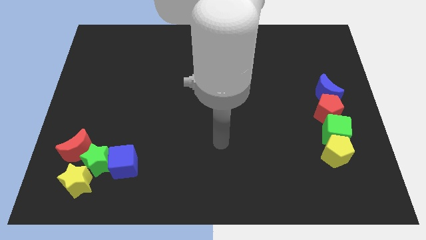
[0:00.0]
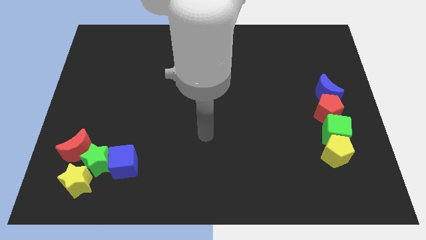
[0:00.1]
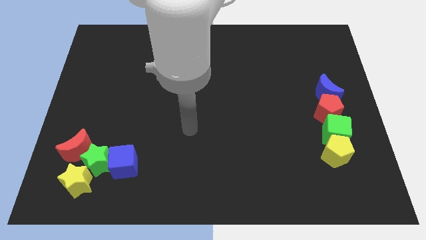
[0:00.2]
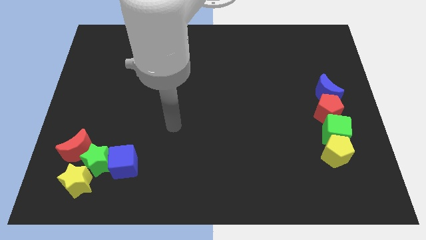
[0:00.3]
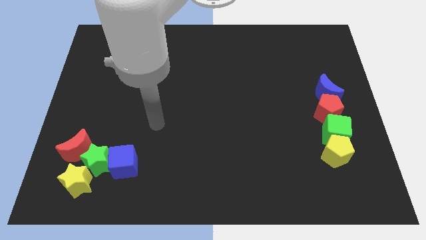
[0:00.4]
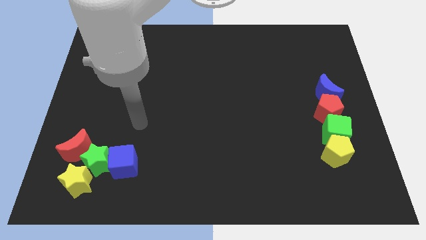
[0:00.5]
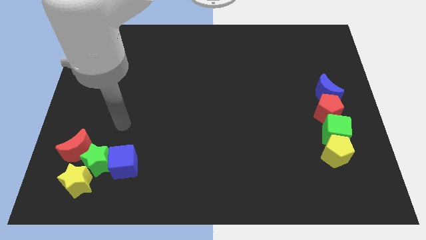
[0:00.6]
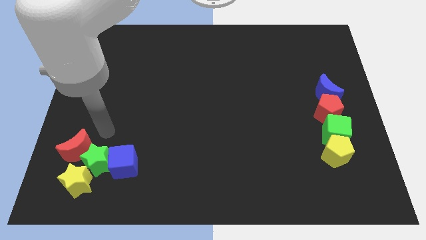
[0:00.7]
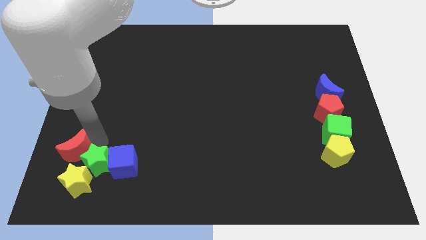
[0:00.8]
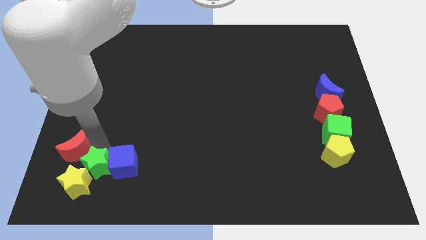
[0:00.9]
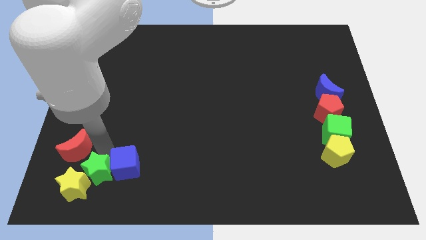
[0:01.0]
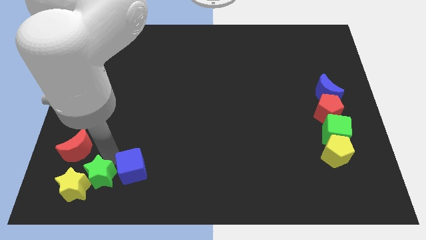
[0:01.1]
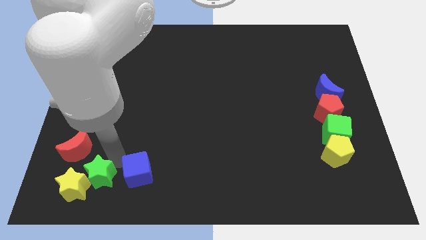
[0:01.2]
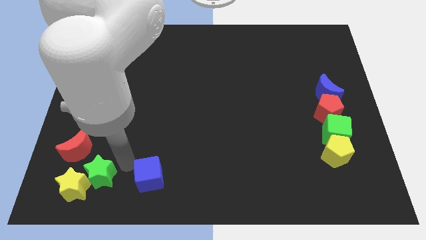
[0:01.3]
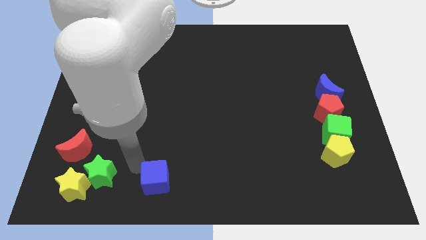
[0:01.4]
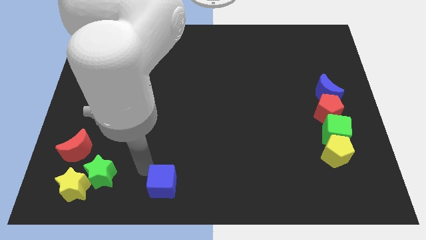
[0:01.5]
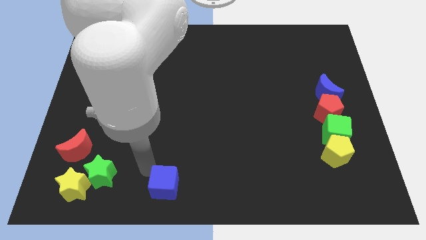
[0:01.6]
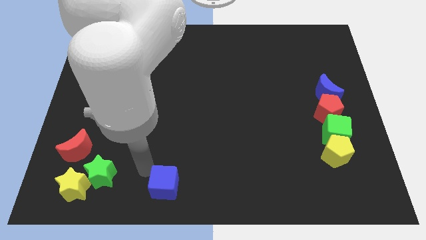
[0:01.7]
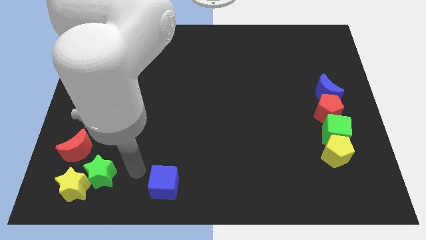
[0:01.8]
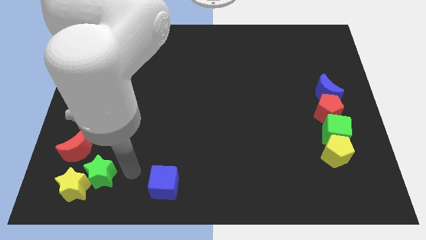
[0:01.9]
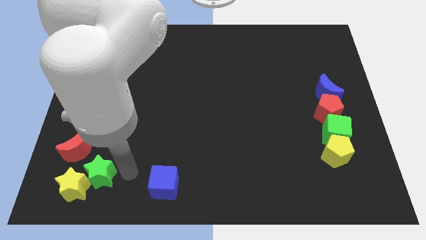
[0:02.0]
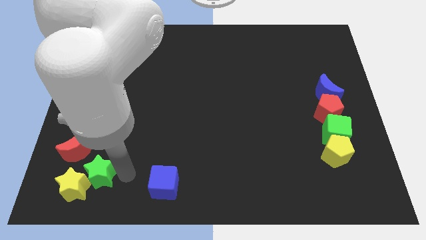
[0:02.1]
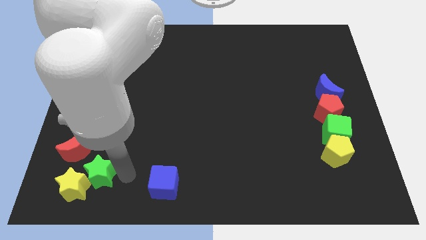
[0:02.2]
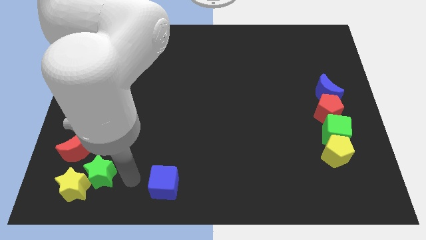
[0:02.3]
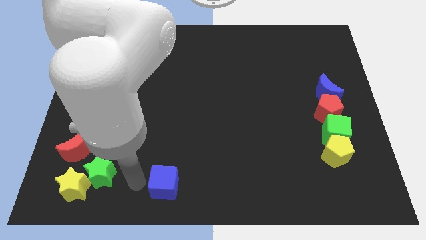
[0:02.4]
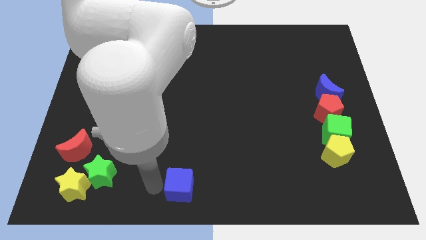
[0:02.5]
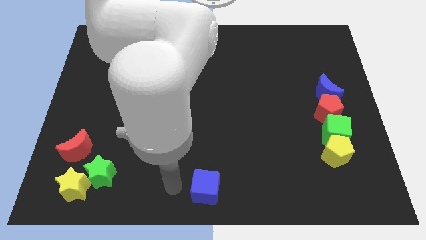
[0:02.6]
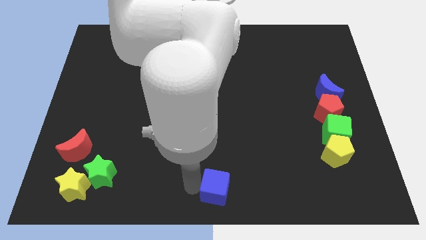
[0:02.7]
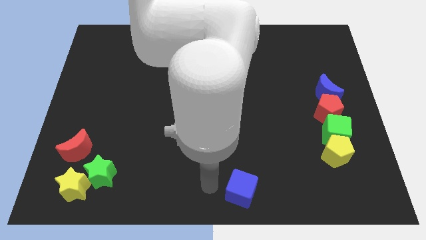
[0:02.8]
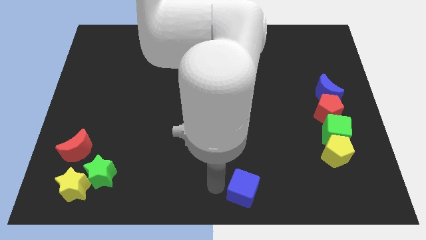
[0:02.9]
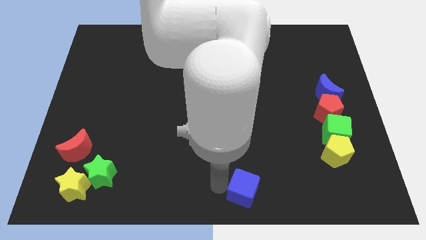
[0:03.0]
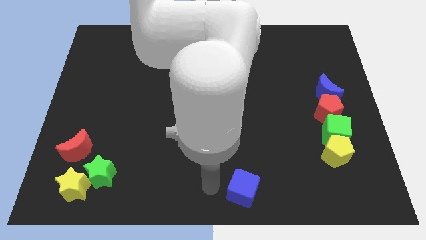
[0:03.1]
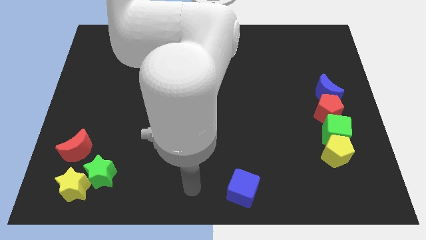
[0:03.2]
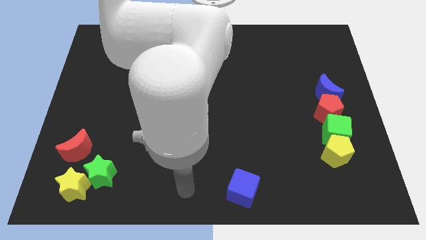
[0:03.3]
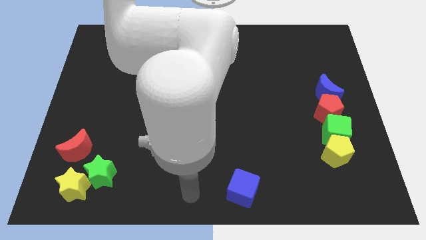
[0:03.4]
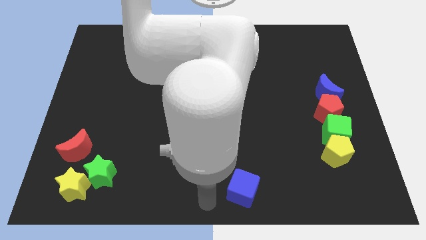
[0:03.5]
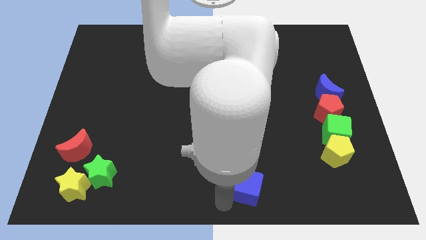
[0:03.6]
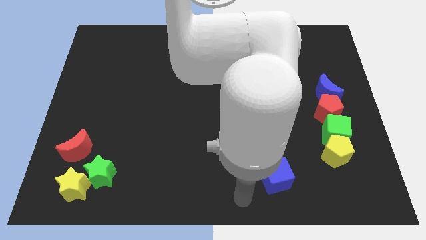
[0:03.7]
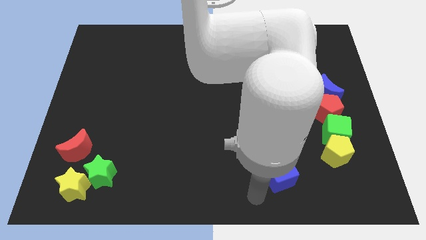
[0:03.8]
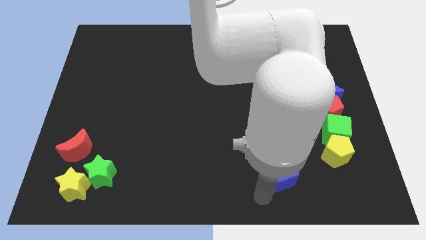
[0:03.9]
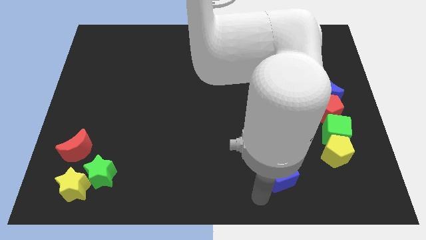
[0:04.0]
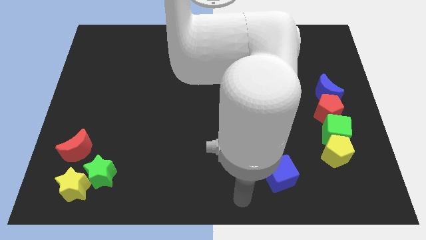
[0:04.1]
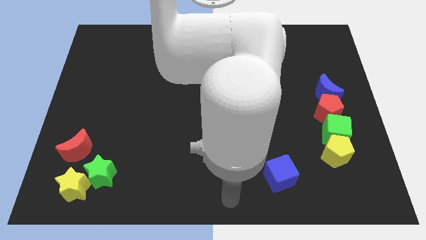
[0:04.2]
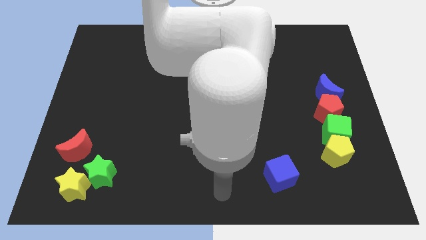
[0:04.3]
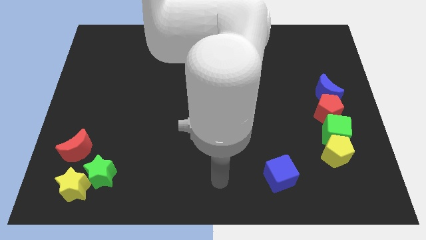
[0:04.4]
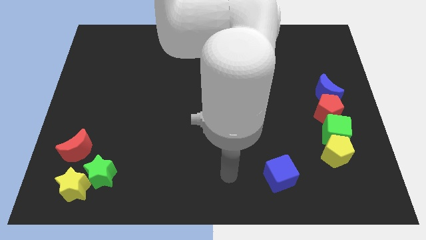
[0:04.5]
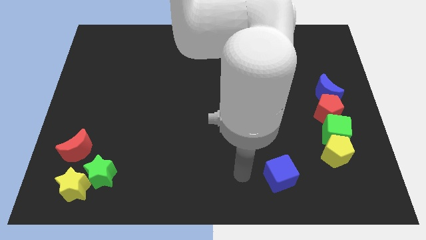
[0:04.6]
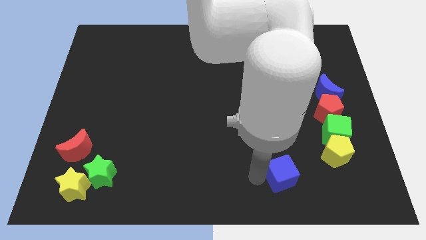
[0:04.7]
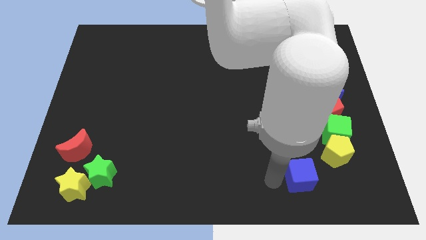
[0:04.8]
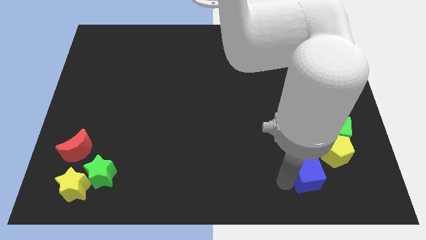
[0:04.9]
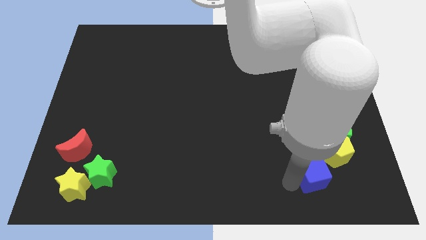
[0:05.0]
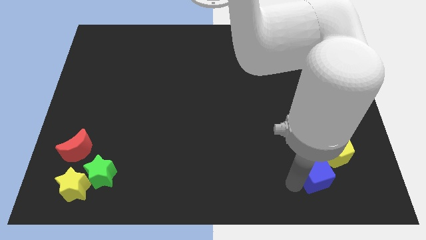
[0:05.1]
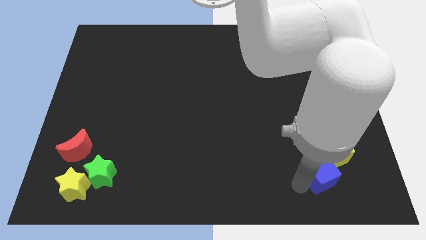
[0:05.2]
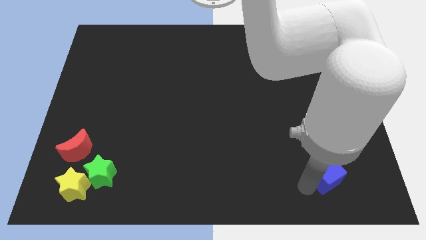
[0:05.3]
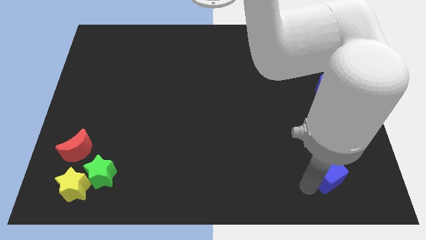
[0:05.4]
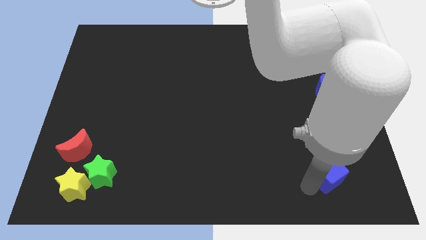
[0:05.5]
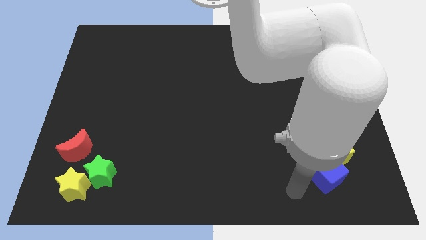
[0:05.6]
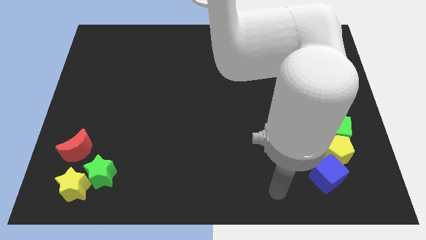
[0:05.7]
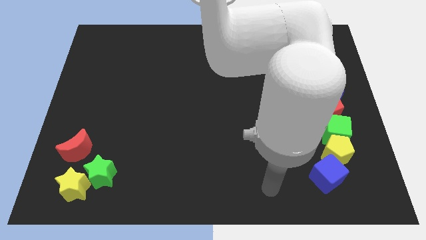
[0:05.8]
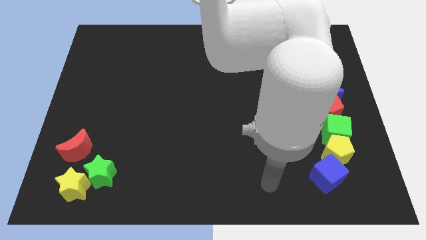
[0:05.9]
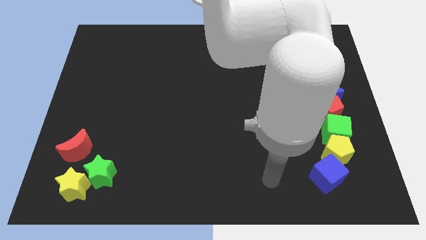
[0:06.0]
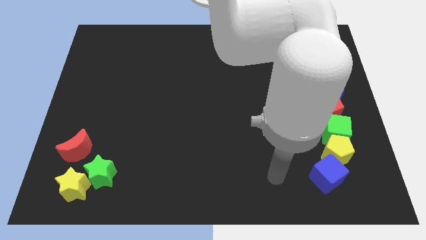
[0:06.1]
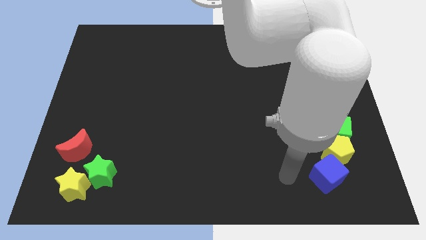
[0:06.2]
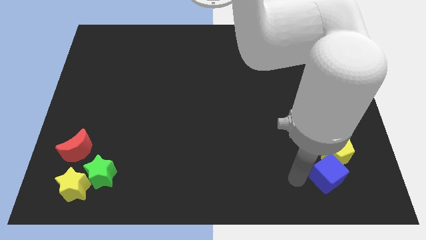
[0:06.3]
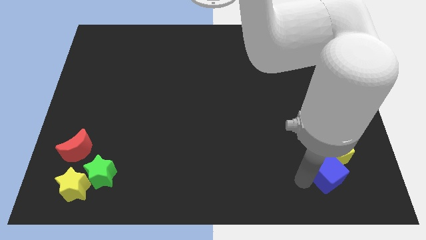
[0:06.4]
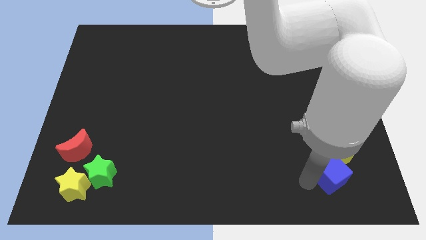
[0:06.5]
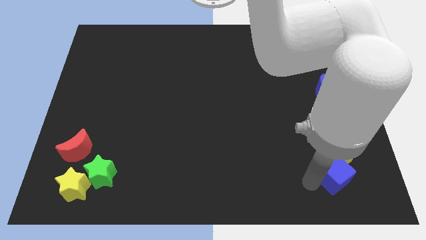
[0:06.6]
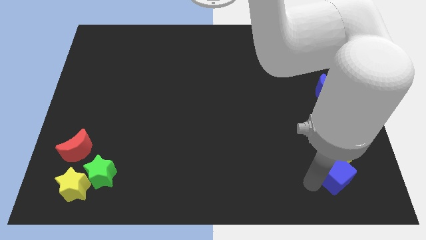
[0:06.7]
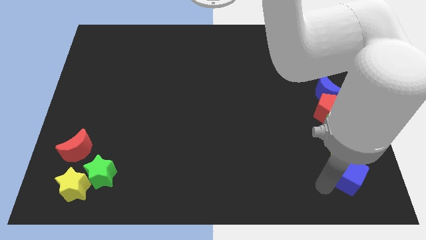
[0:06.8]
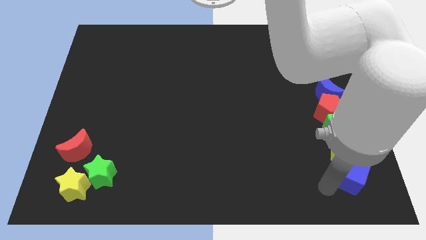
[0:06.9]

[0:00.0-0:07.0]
move blue cube below the yellow pentagon

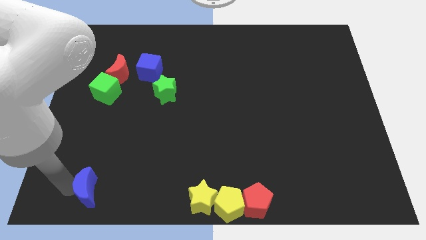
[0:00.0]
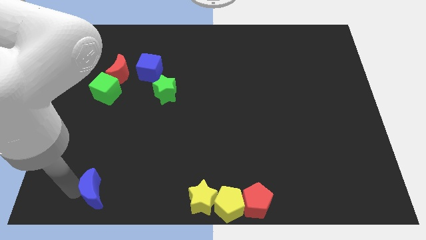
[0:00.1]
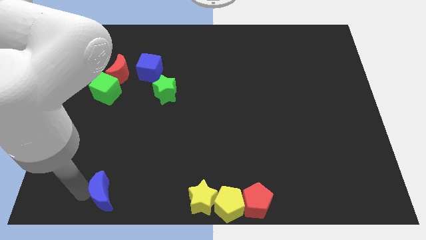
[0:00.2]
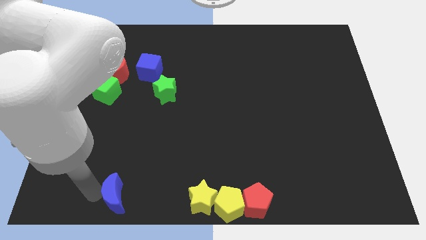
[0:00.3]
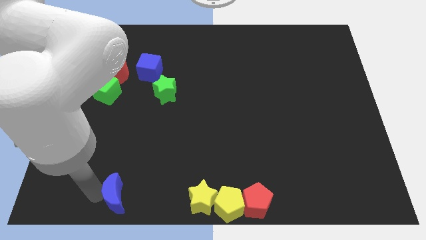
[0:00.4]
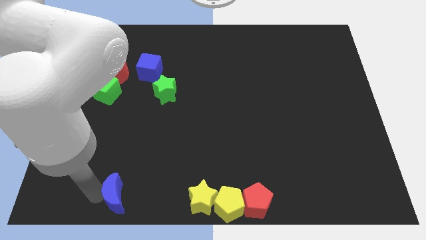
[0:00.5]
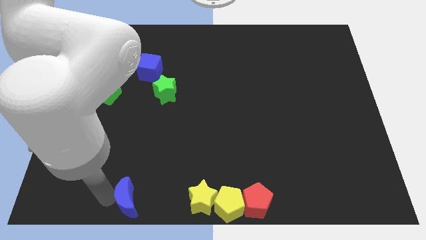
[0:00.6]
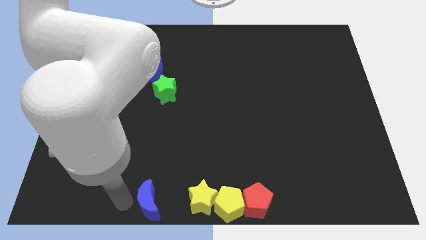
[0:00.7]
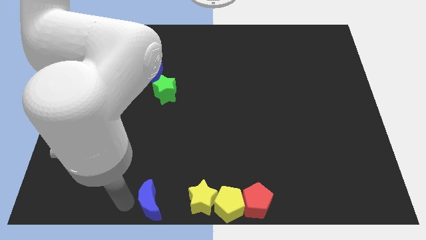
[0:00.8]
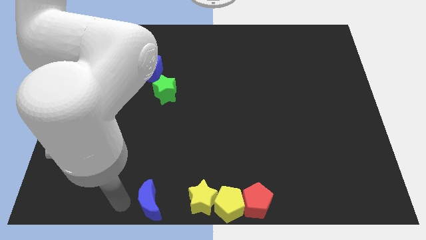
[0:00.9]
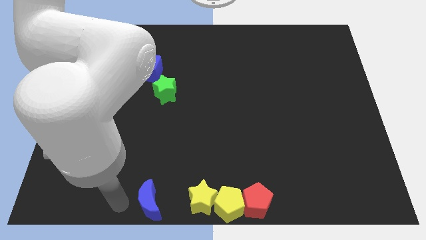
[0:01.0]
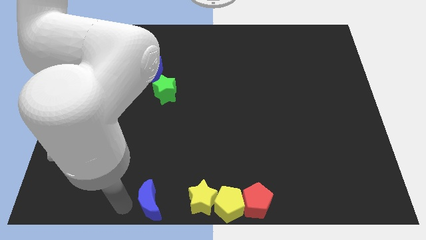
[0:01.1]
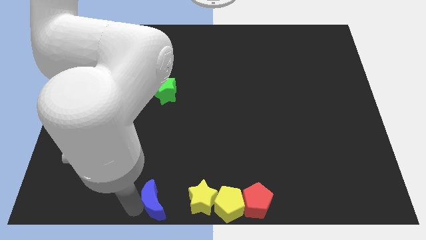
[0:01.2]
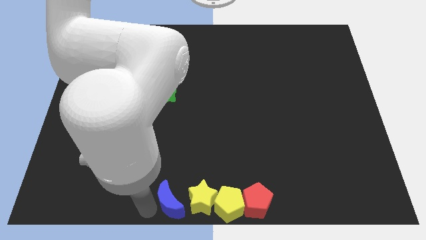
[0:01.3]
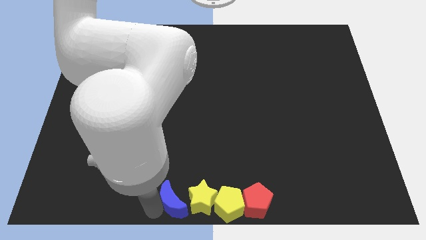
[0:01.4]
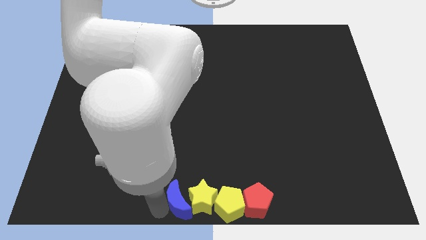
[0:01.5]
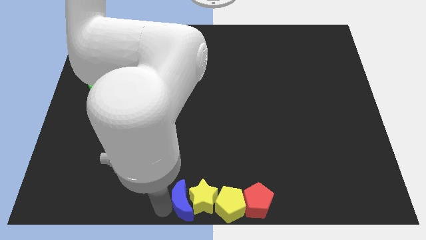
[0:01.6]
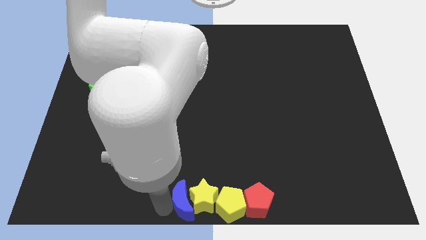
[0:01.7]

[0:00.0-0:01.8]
push the blue moon into the yellow star

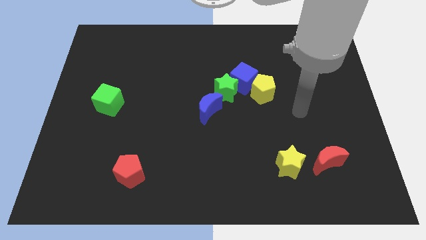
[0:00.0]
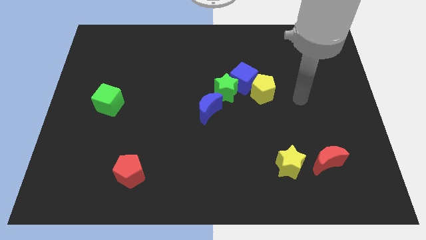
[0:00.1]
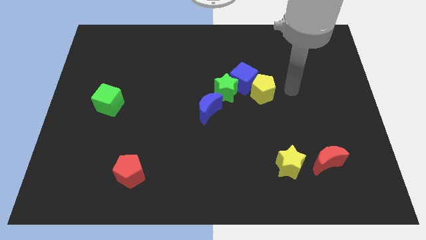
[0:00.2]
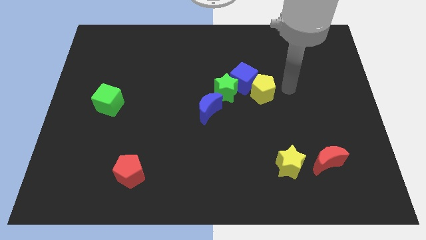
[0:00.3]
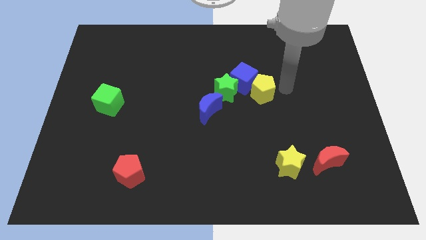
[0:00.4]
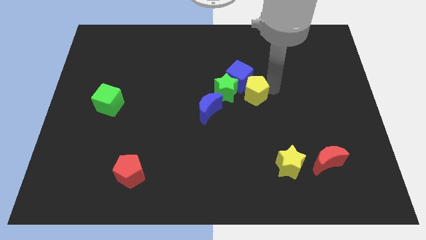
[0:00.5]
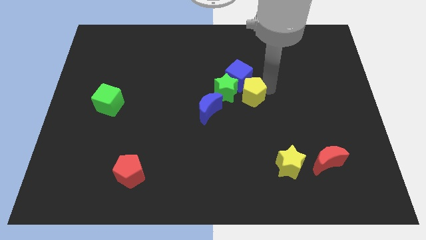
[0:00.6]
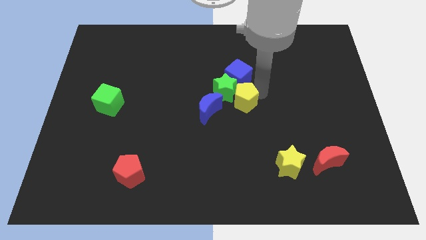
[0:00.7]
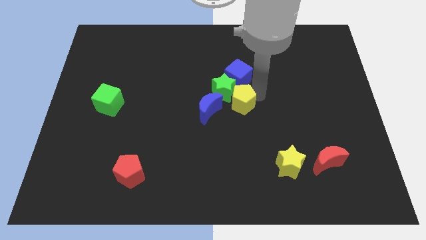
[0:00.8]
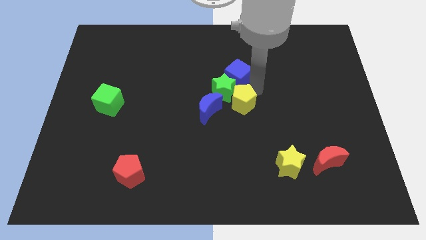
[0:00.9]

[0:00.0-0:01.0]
move the yellow pentagon to the bottom right side of the green star
